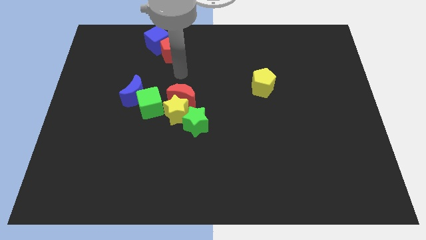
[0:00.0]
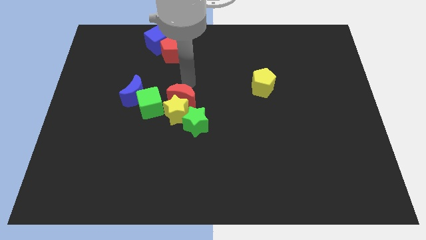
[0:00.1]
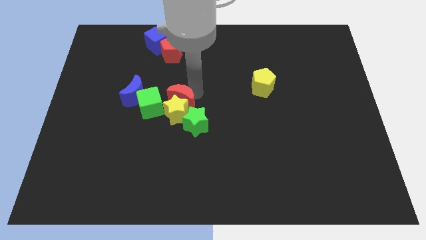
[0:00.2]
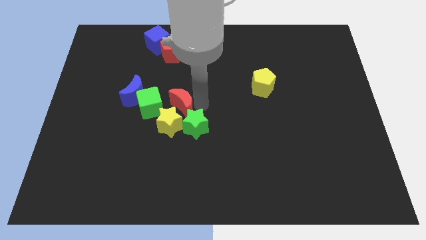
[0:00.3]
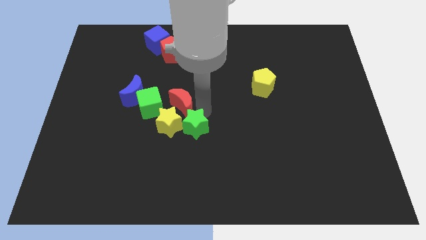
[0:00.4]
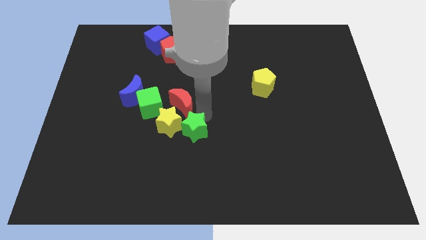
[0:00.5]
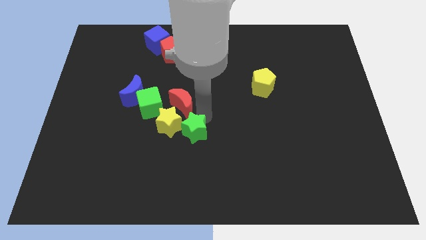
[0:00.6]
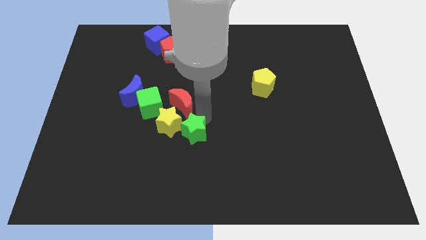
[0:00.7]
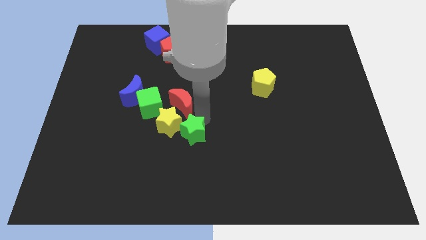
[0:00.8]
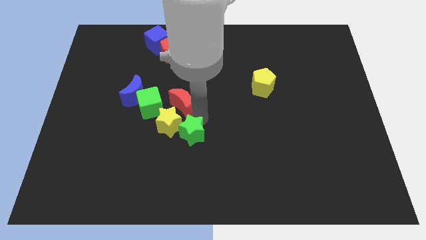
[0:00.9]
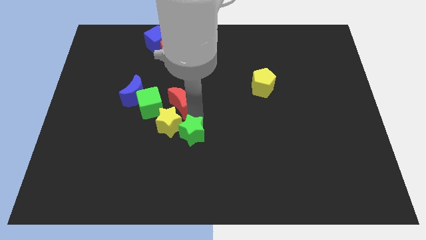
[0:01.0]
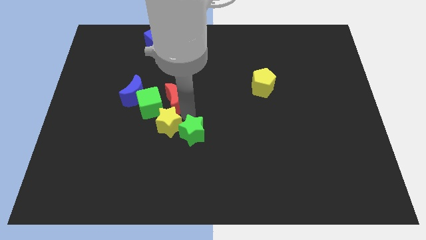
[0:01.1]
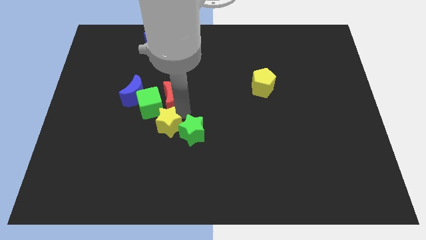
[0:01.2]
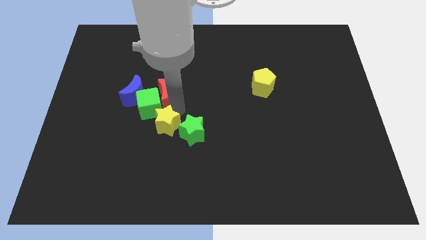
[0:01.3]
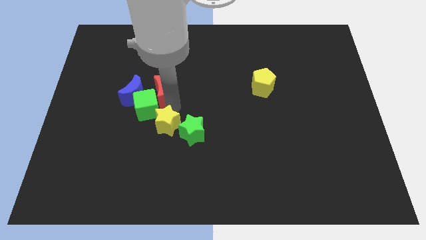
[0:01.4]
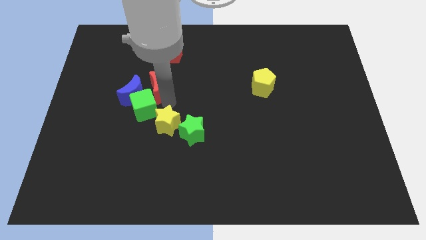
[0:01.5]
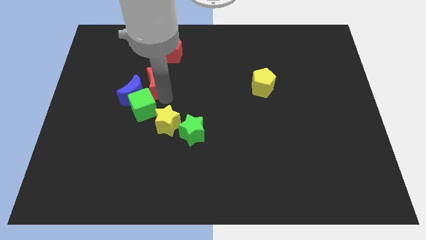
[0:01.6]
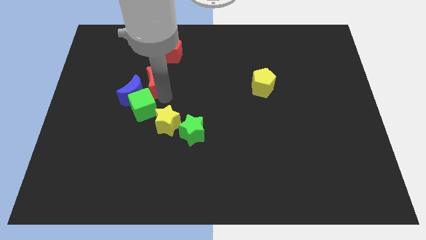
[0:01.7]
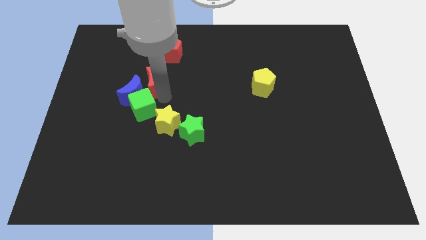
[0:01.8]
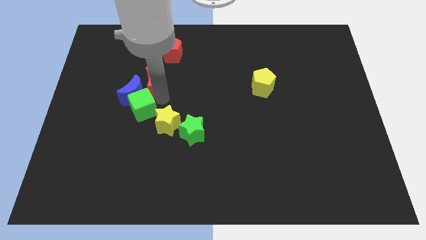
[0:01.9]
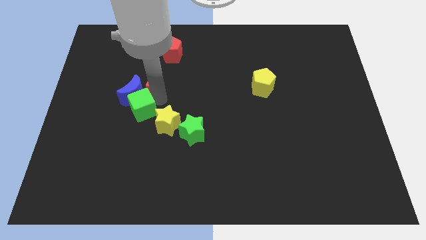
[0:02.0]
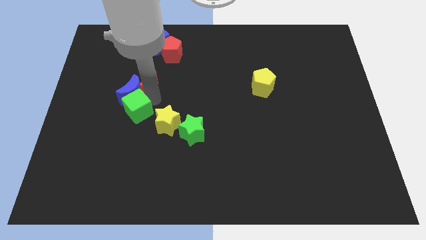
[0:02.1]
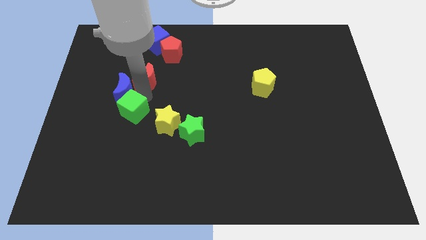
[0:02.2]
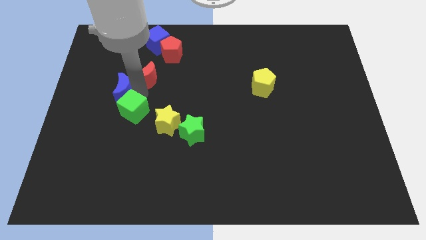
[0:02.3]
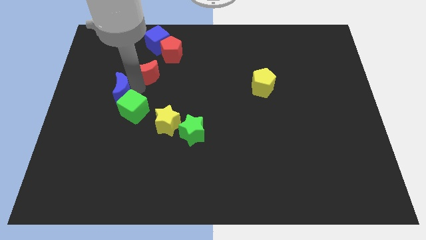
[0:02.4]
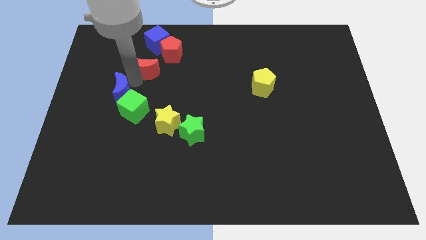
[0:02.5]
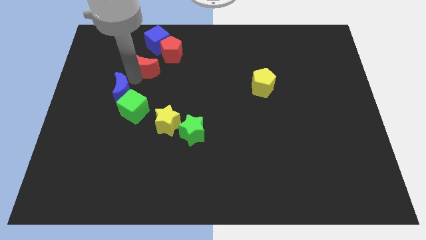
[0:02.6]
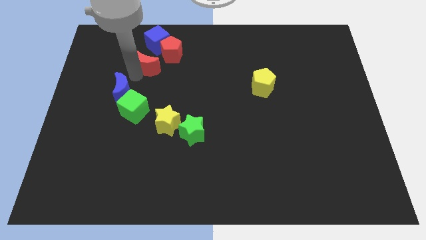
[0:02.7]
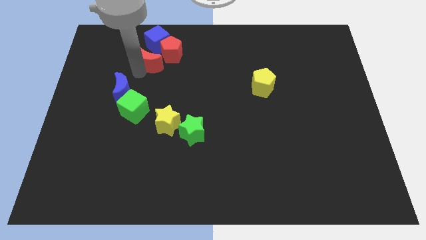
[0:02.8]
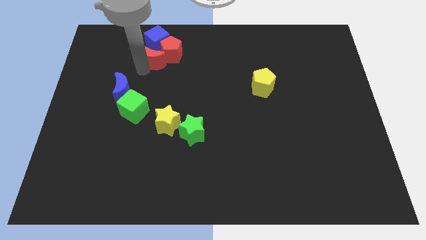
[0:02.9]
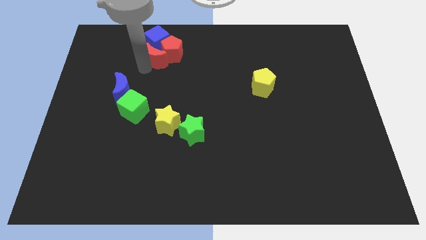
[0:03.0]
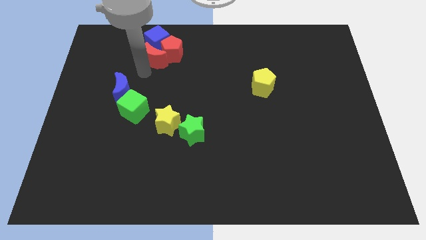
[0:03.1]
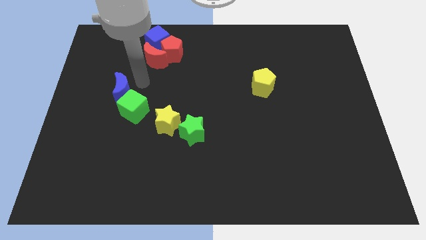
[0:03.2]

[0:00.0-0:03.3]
push the red moon into red pentagon

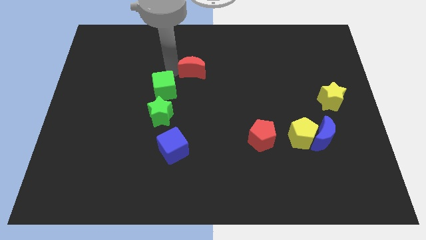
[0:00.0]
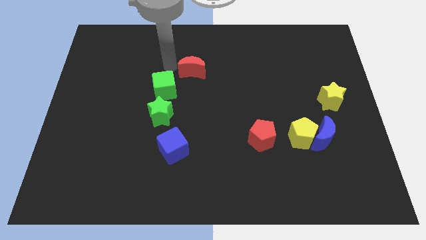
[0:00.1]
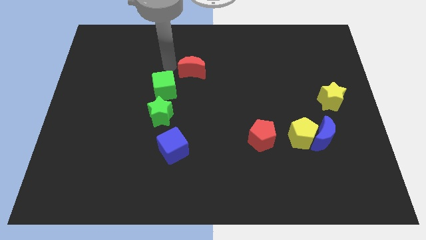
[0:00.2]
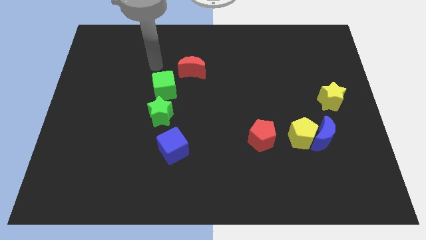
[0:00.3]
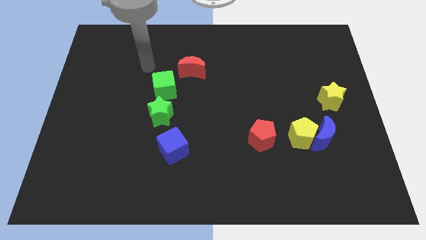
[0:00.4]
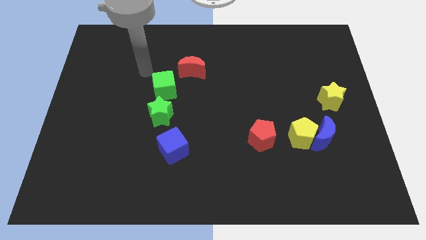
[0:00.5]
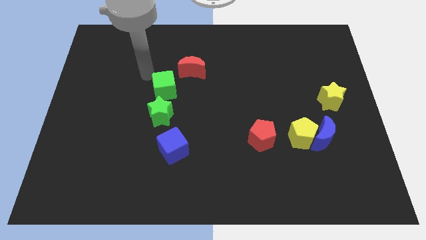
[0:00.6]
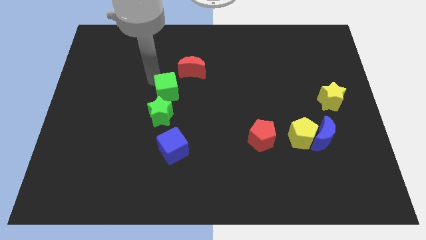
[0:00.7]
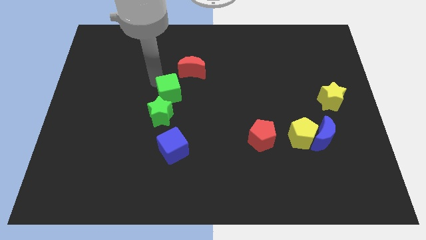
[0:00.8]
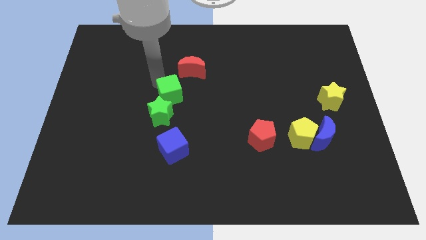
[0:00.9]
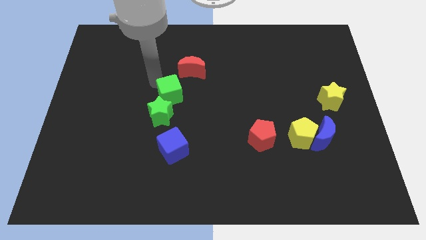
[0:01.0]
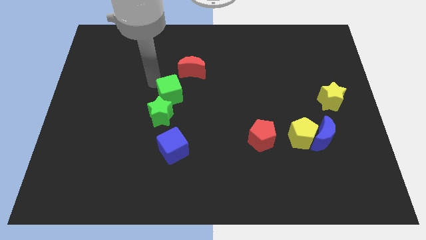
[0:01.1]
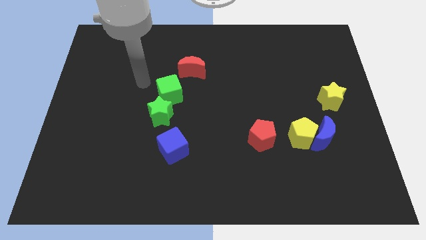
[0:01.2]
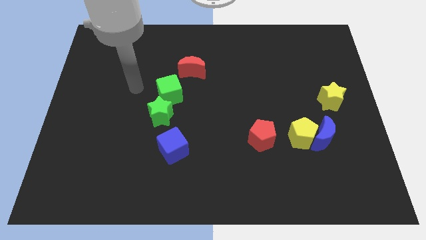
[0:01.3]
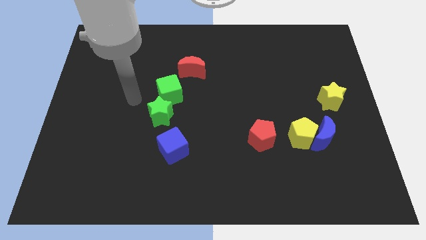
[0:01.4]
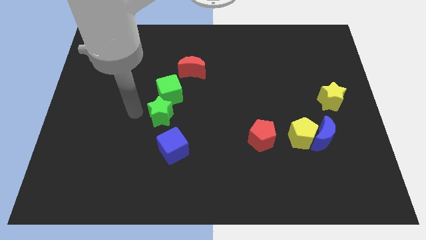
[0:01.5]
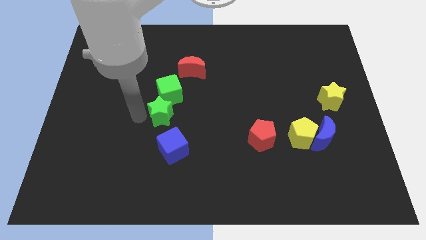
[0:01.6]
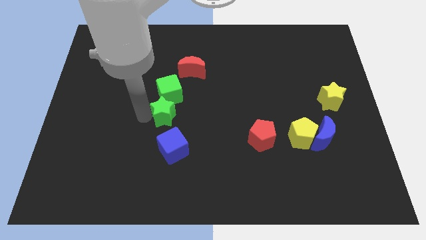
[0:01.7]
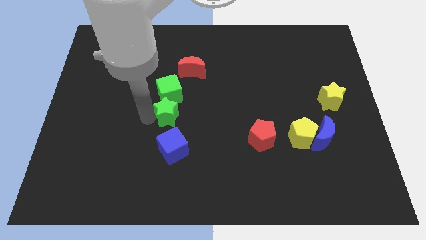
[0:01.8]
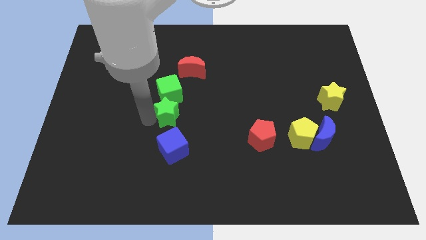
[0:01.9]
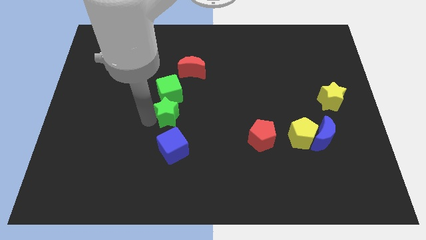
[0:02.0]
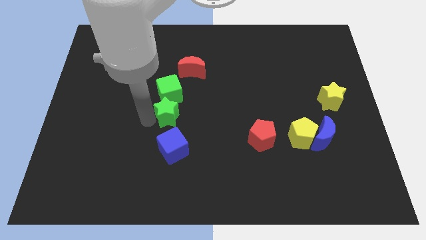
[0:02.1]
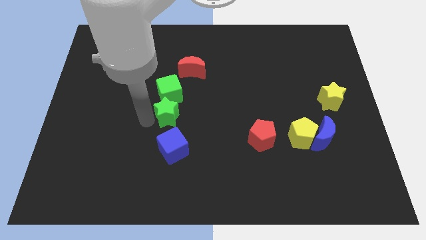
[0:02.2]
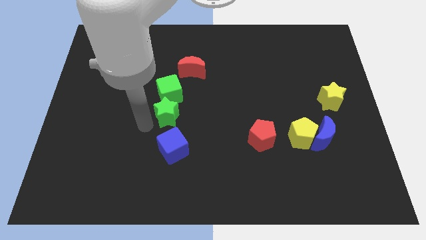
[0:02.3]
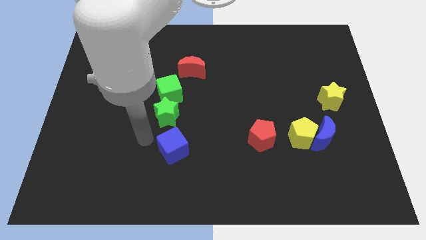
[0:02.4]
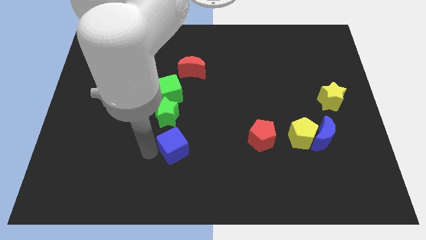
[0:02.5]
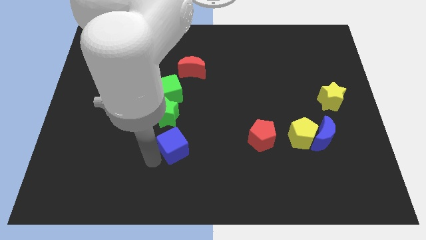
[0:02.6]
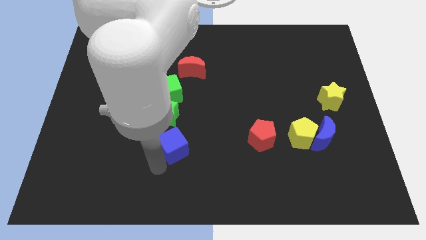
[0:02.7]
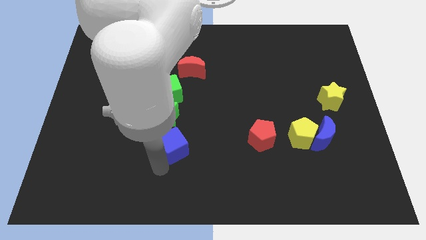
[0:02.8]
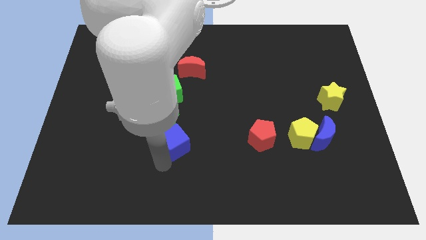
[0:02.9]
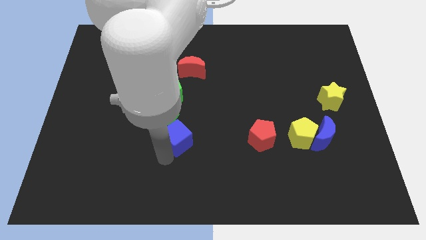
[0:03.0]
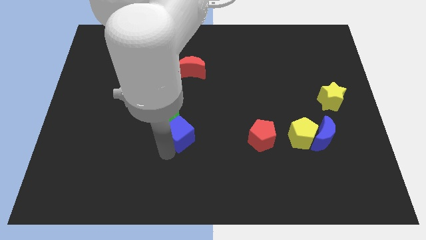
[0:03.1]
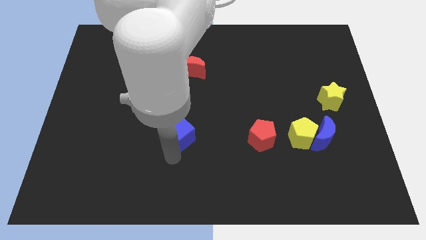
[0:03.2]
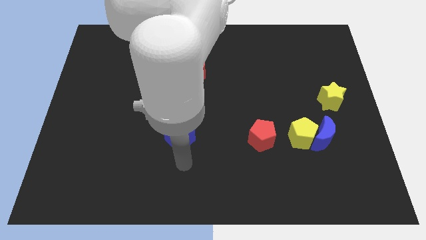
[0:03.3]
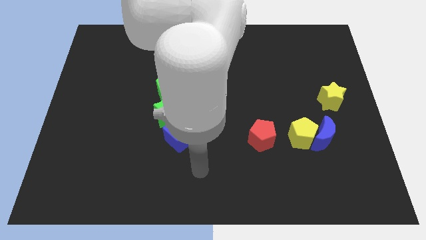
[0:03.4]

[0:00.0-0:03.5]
adjust green blocks and blue cube in a diagonal line

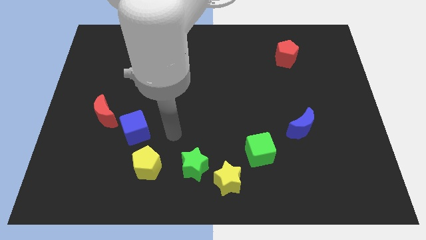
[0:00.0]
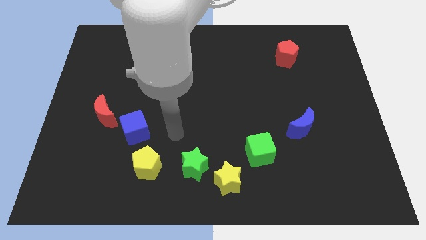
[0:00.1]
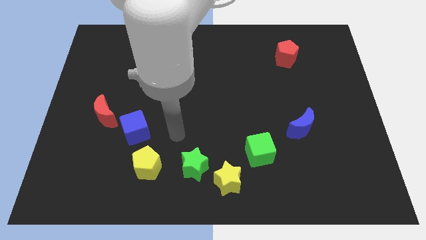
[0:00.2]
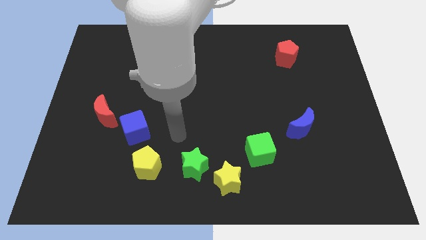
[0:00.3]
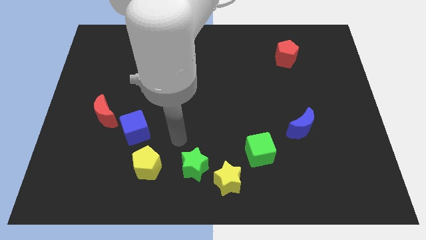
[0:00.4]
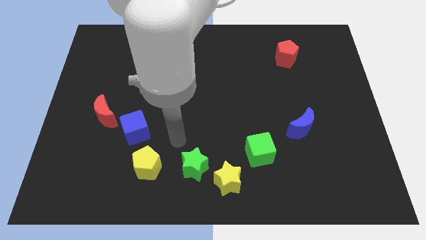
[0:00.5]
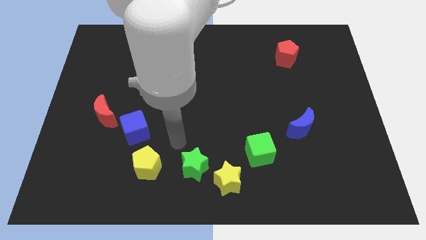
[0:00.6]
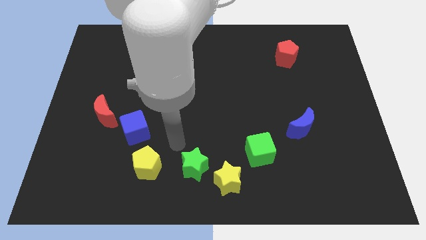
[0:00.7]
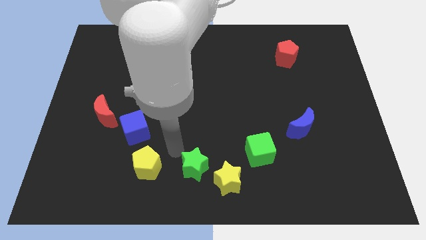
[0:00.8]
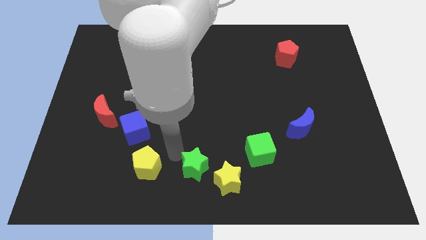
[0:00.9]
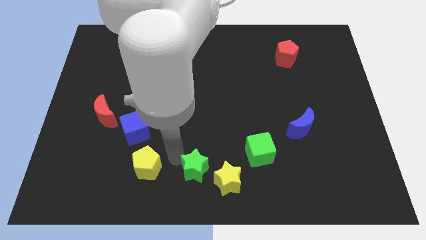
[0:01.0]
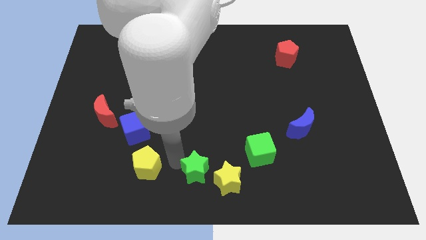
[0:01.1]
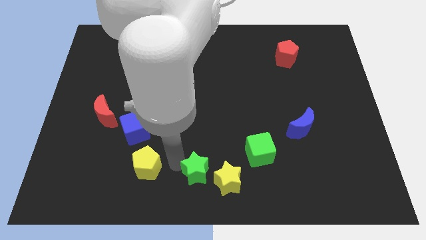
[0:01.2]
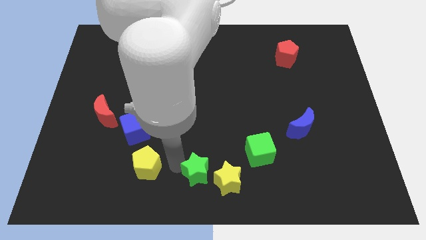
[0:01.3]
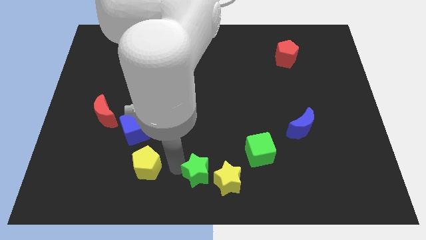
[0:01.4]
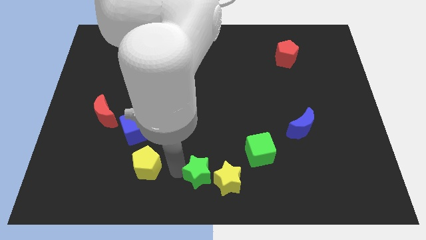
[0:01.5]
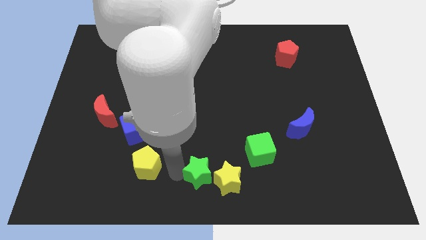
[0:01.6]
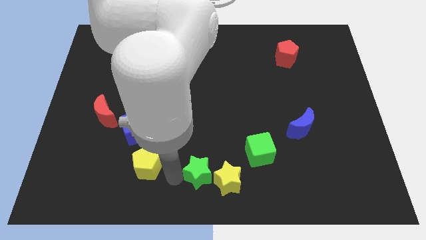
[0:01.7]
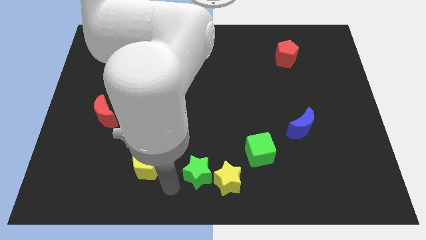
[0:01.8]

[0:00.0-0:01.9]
move the green star close to the yellow star
